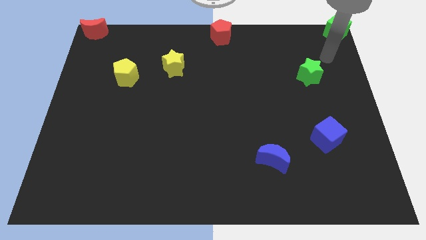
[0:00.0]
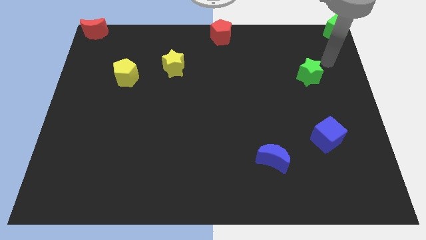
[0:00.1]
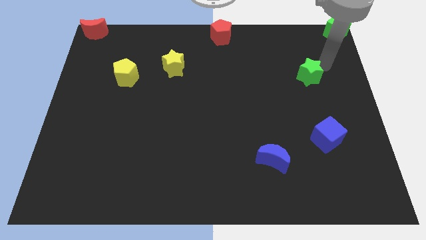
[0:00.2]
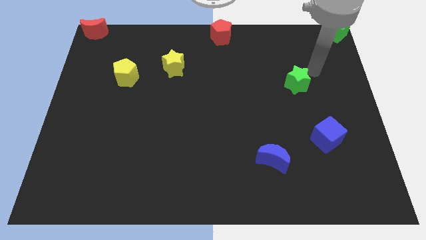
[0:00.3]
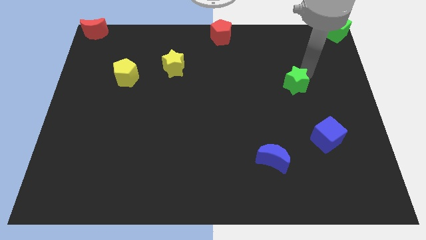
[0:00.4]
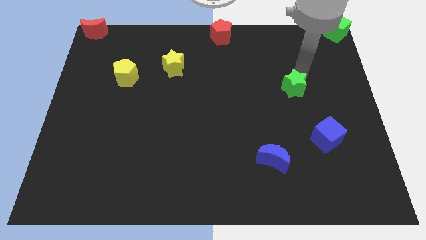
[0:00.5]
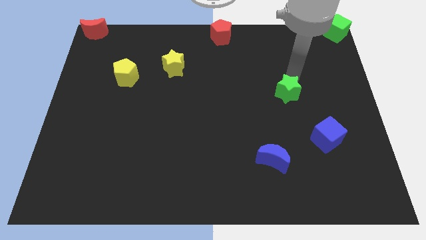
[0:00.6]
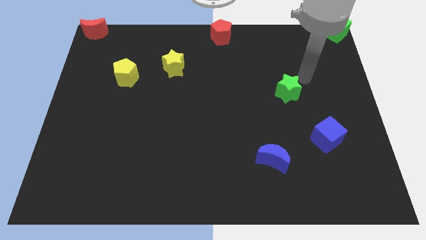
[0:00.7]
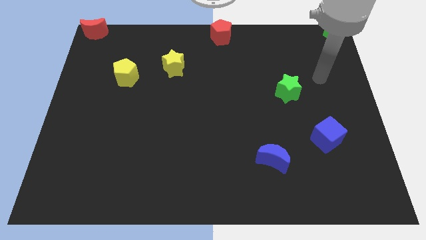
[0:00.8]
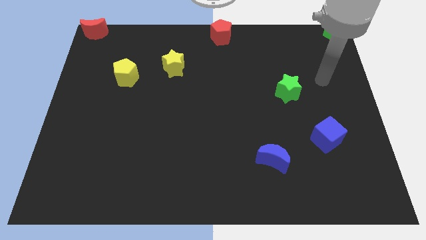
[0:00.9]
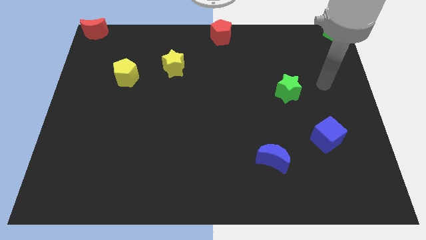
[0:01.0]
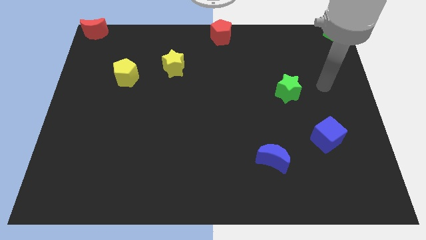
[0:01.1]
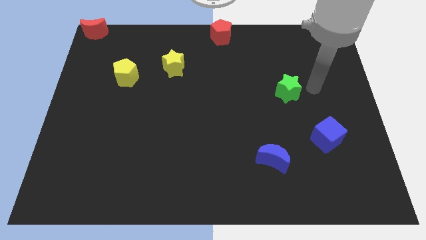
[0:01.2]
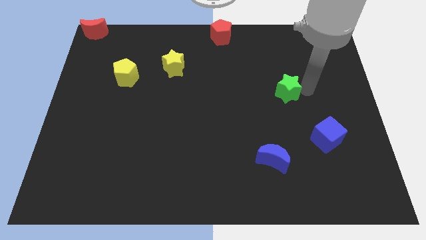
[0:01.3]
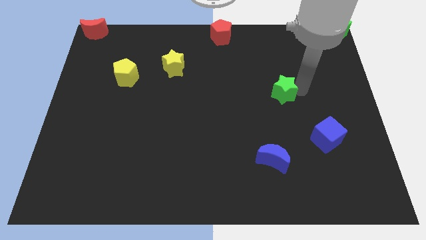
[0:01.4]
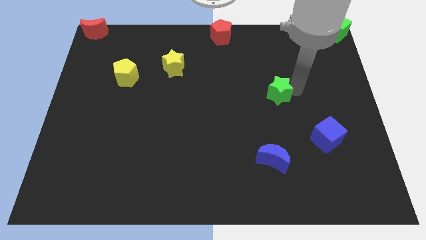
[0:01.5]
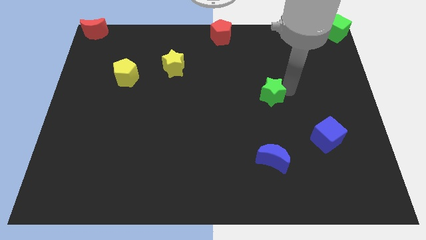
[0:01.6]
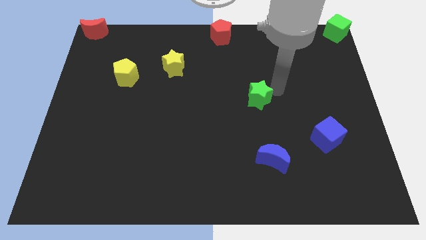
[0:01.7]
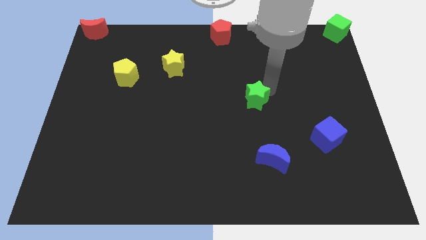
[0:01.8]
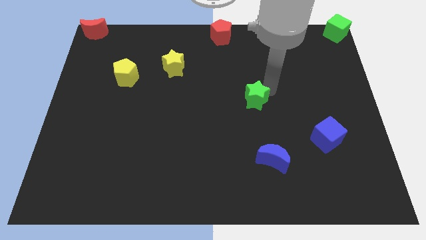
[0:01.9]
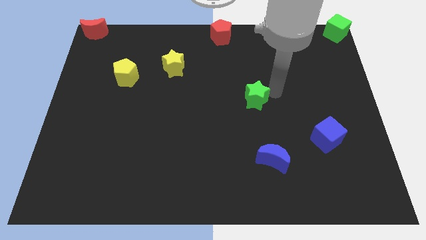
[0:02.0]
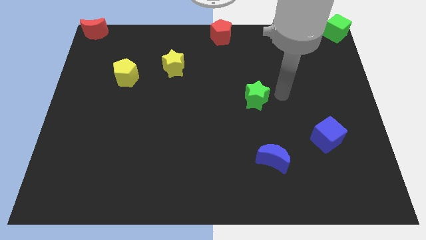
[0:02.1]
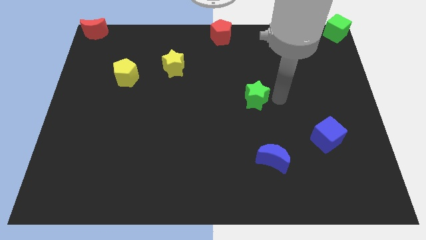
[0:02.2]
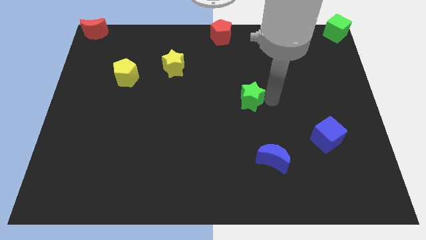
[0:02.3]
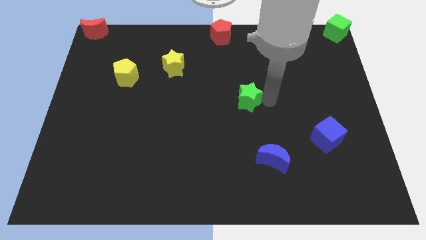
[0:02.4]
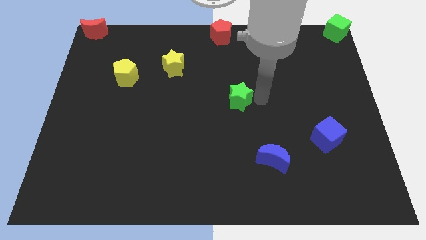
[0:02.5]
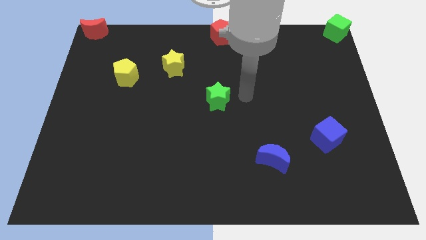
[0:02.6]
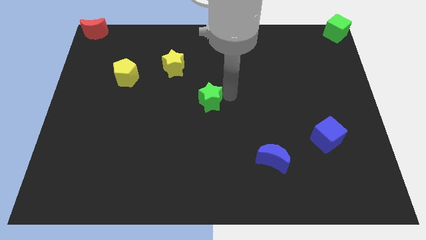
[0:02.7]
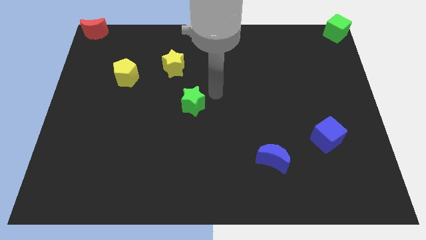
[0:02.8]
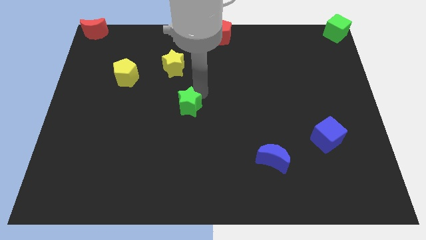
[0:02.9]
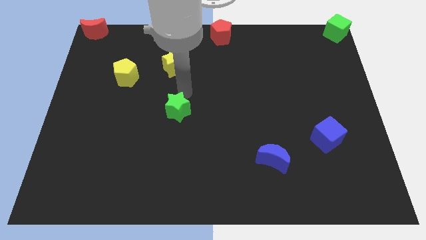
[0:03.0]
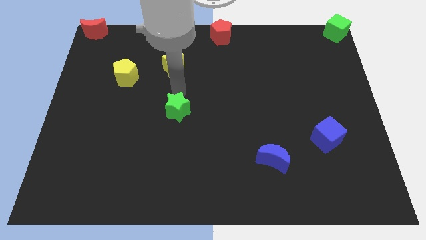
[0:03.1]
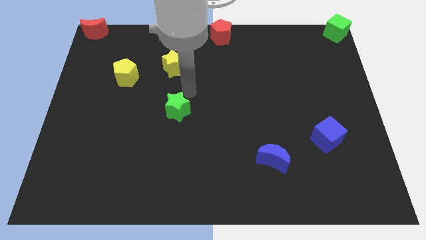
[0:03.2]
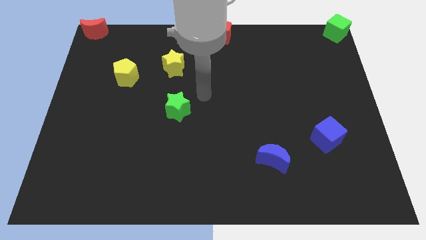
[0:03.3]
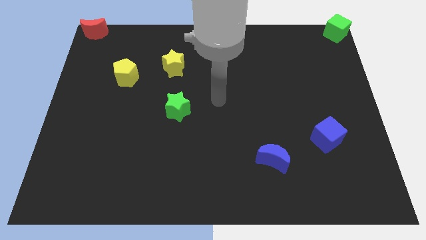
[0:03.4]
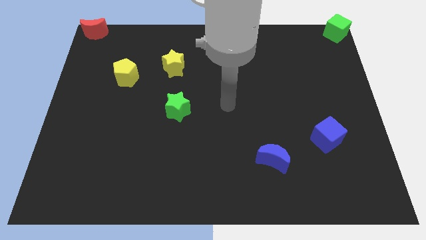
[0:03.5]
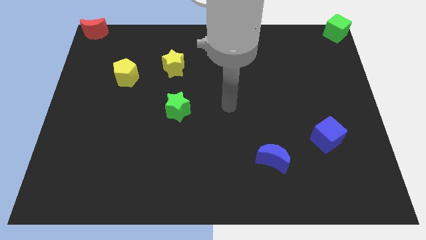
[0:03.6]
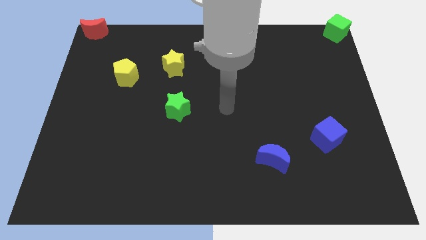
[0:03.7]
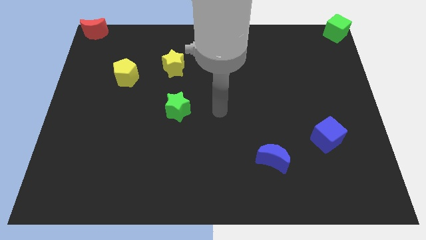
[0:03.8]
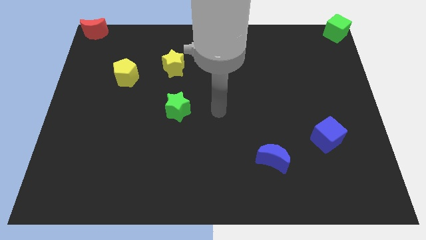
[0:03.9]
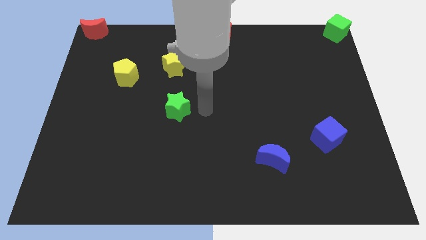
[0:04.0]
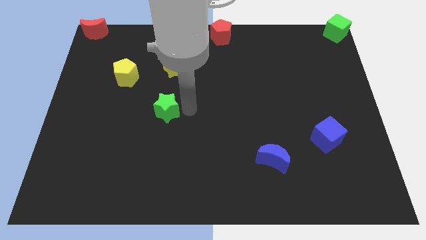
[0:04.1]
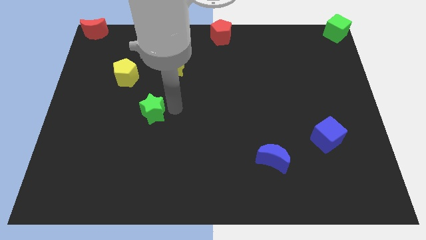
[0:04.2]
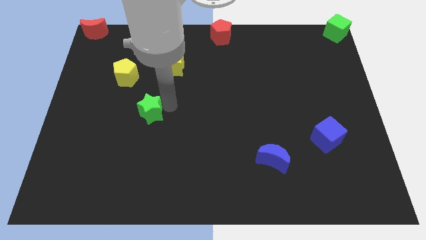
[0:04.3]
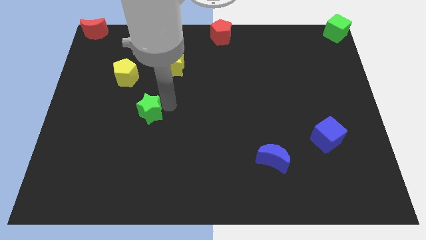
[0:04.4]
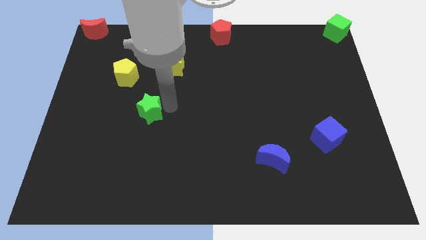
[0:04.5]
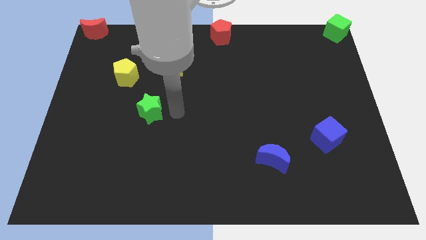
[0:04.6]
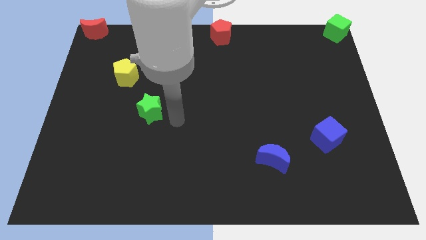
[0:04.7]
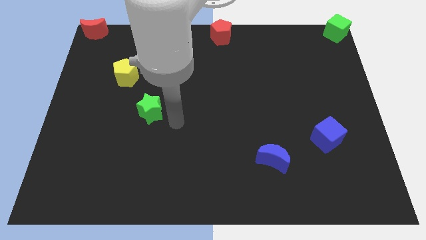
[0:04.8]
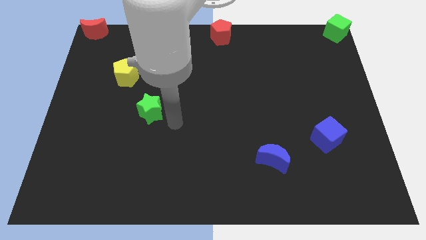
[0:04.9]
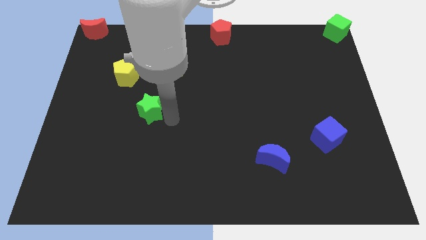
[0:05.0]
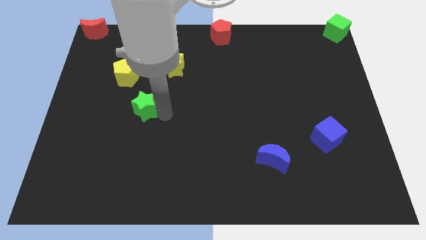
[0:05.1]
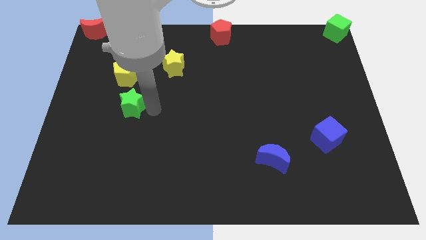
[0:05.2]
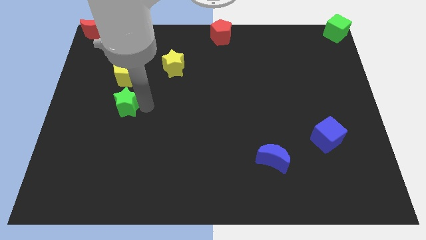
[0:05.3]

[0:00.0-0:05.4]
push the green star below the yellow pentagon

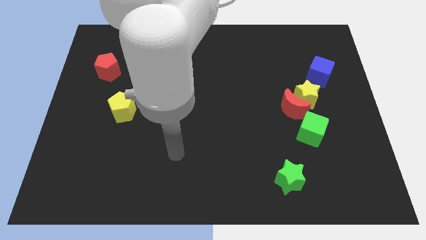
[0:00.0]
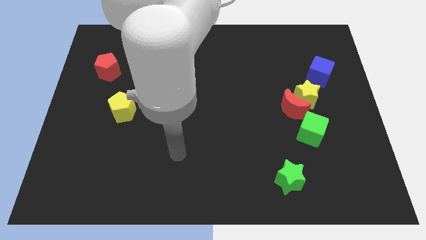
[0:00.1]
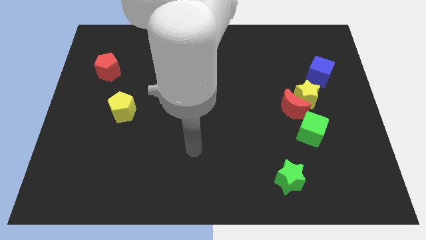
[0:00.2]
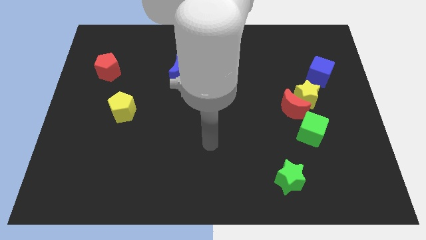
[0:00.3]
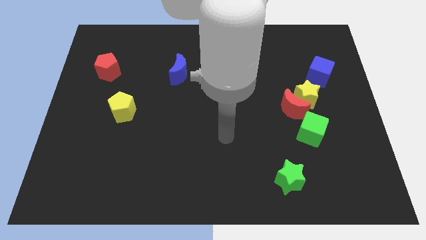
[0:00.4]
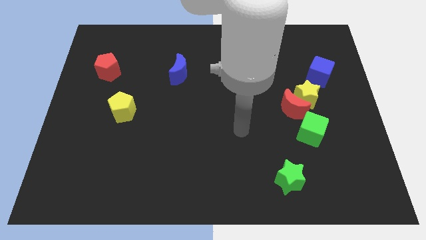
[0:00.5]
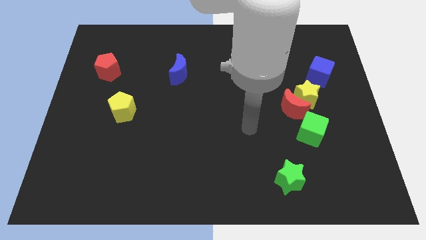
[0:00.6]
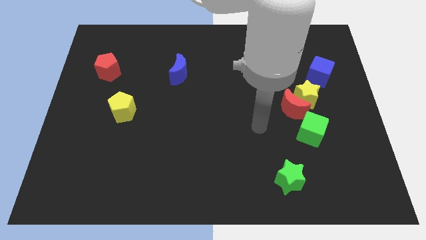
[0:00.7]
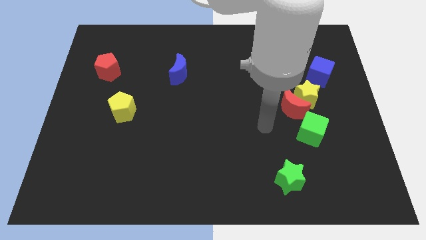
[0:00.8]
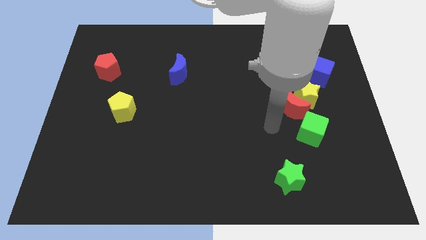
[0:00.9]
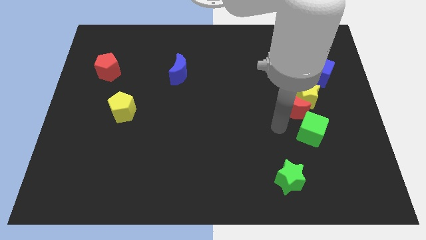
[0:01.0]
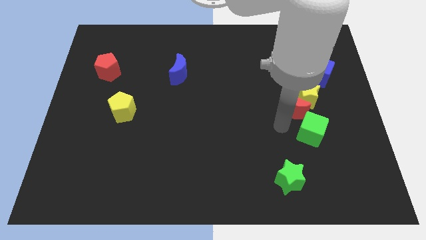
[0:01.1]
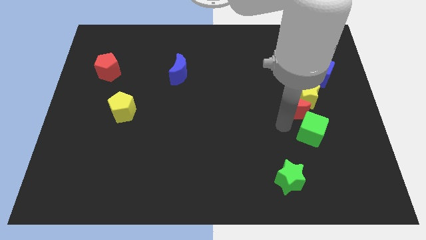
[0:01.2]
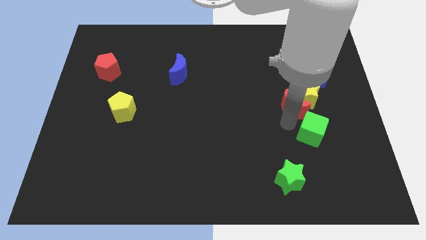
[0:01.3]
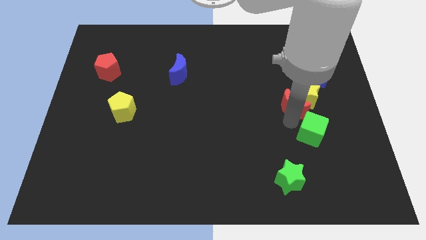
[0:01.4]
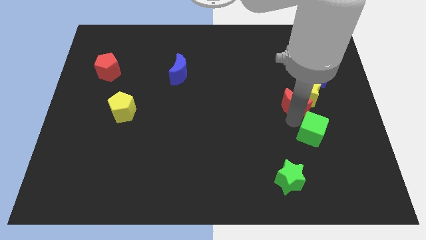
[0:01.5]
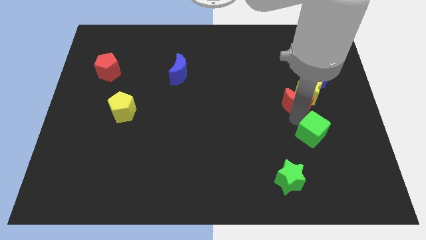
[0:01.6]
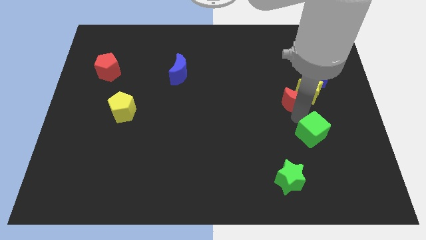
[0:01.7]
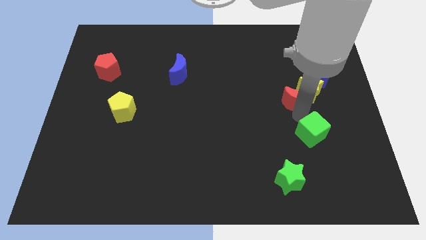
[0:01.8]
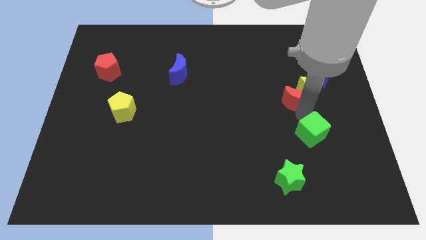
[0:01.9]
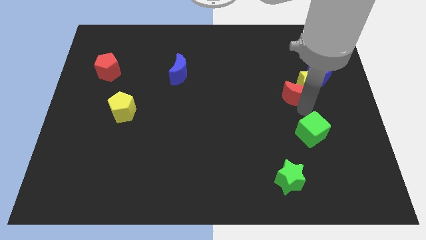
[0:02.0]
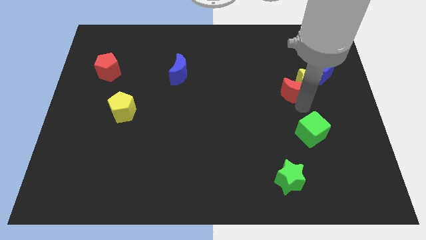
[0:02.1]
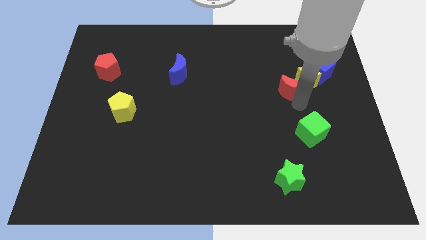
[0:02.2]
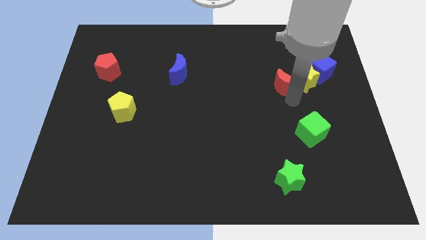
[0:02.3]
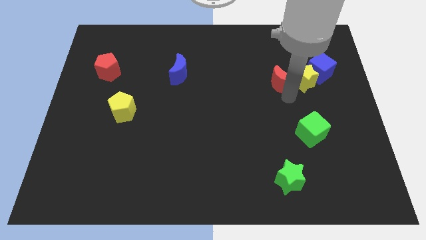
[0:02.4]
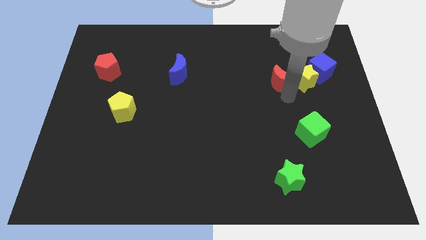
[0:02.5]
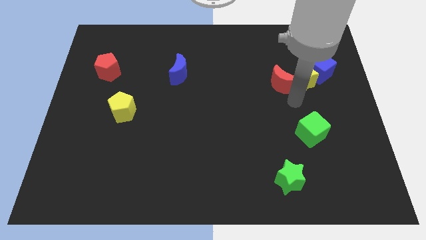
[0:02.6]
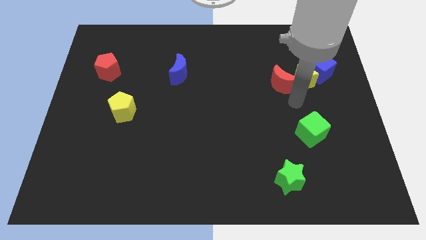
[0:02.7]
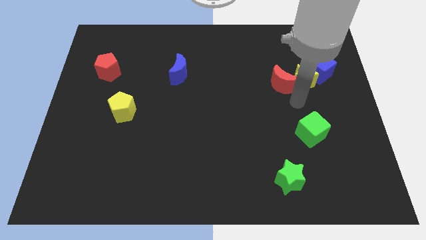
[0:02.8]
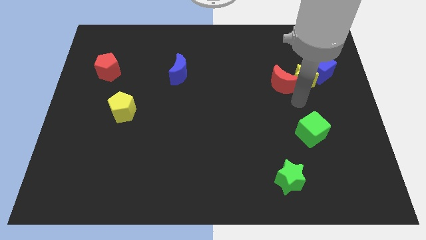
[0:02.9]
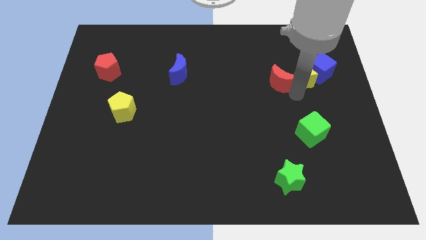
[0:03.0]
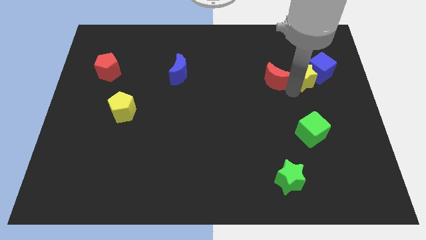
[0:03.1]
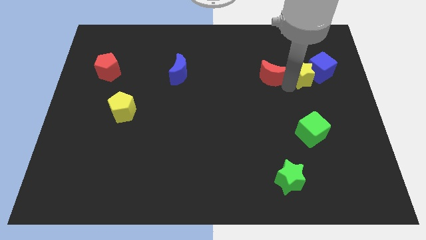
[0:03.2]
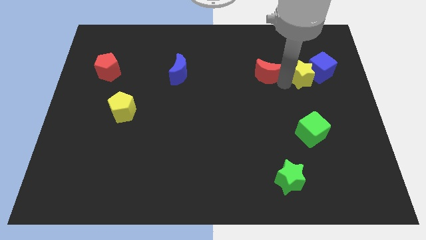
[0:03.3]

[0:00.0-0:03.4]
move the red crescent to the left side of the yellow star

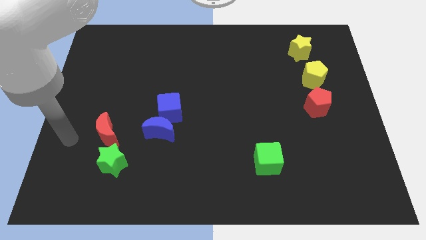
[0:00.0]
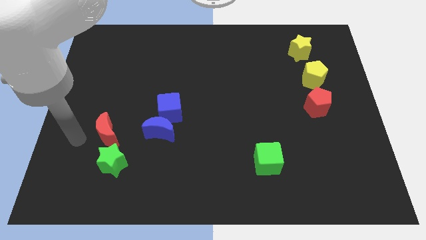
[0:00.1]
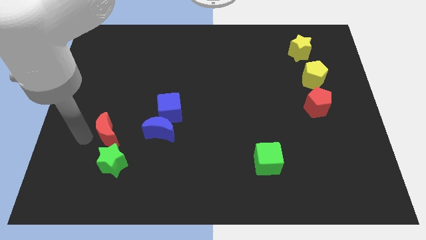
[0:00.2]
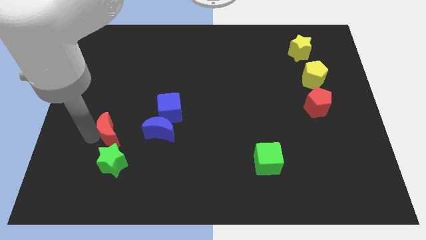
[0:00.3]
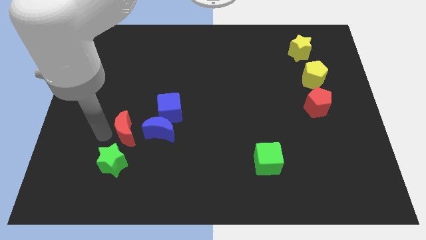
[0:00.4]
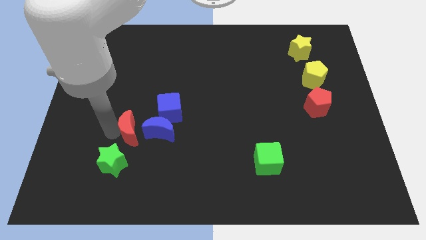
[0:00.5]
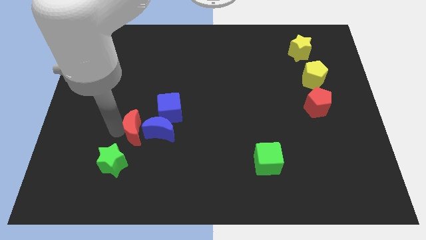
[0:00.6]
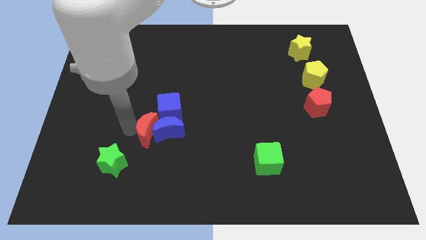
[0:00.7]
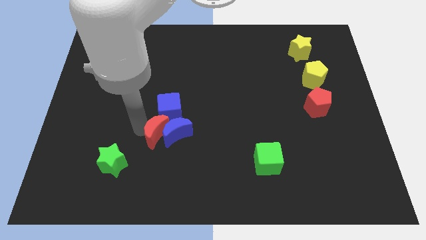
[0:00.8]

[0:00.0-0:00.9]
push red moon into blue moon
